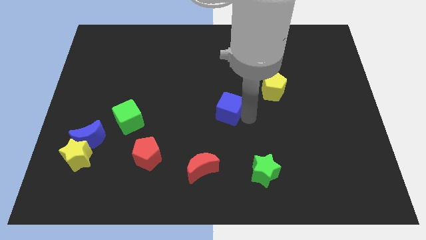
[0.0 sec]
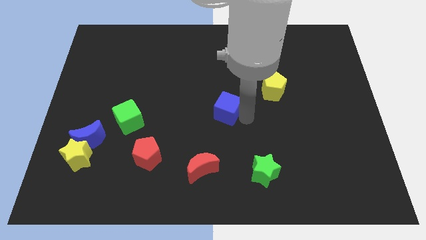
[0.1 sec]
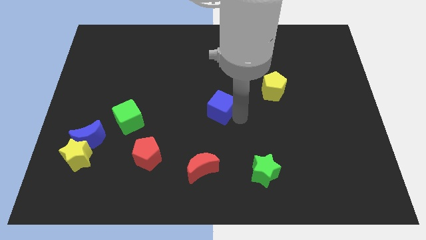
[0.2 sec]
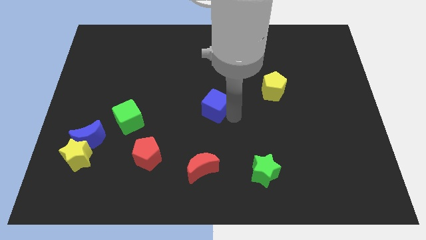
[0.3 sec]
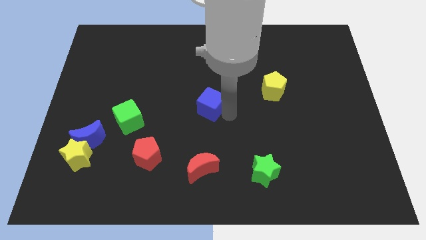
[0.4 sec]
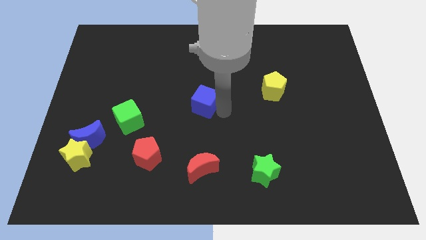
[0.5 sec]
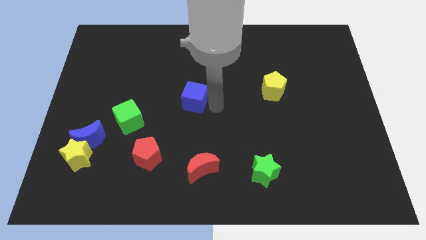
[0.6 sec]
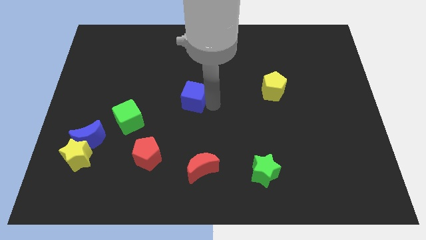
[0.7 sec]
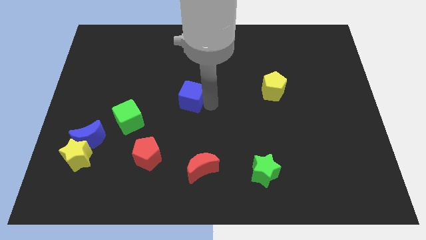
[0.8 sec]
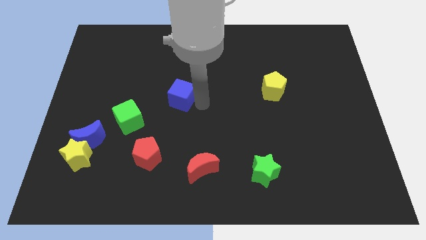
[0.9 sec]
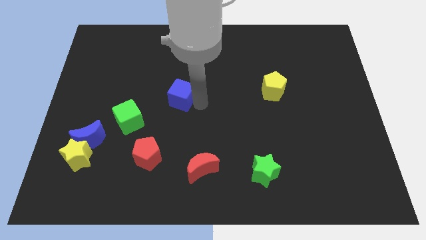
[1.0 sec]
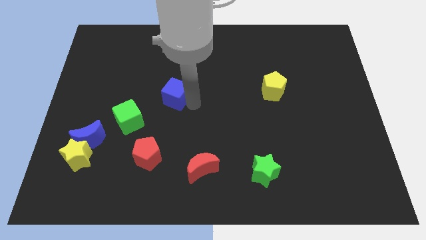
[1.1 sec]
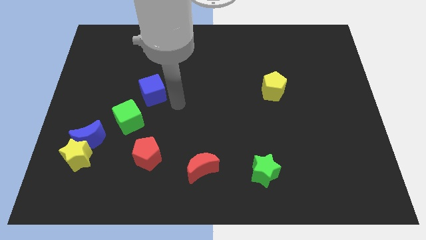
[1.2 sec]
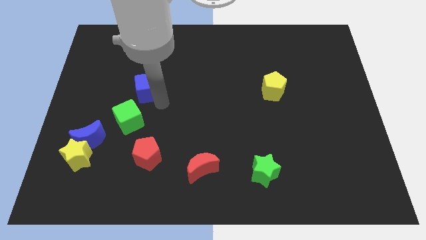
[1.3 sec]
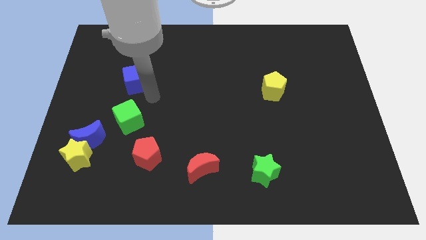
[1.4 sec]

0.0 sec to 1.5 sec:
place blue cube above green cube

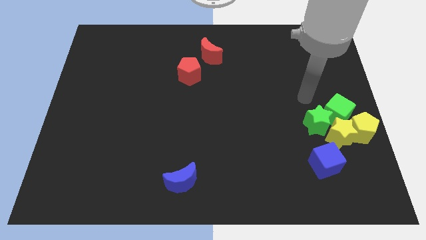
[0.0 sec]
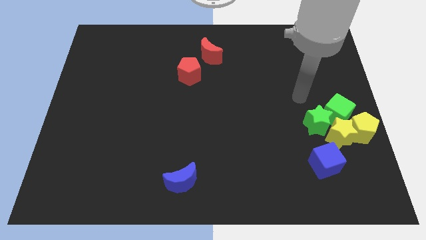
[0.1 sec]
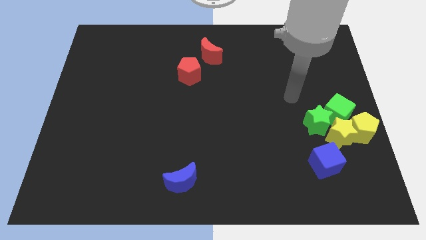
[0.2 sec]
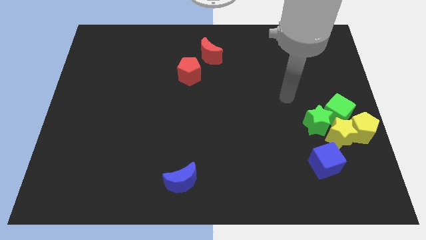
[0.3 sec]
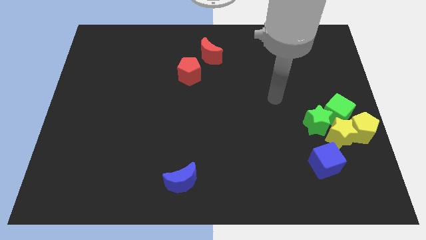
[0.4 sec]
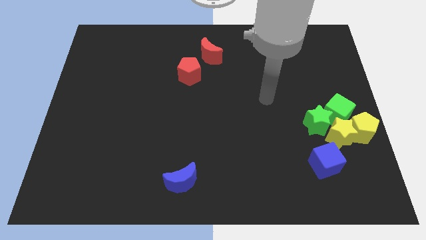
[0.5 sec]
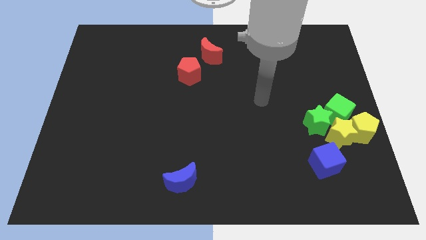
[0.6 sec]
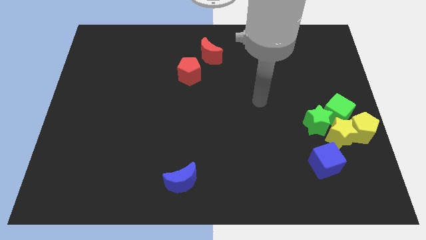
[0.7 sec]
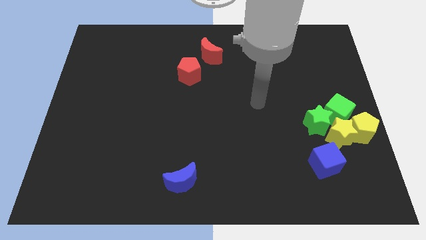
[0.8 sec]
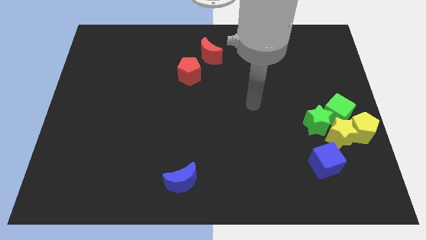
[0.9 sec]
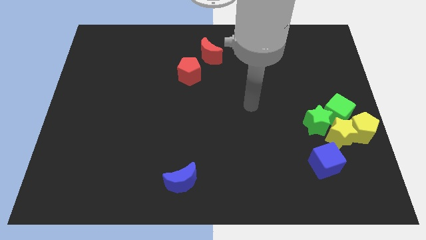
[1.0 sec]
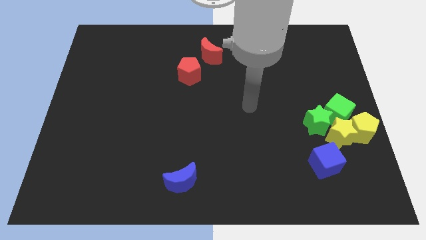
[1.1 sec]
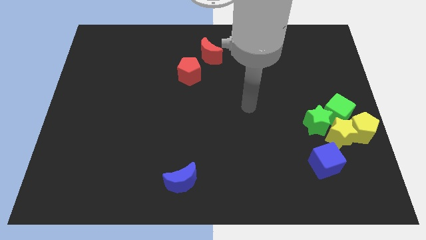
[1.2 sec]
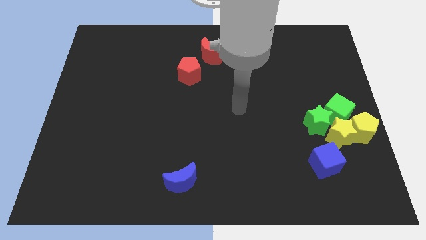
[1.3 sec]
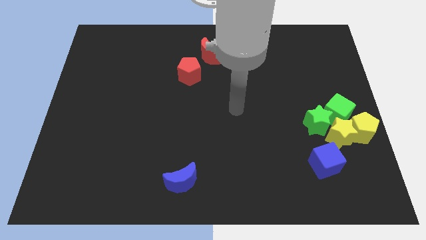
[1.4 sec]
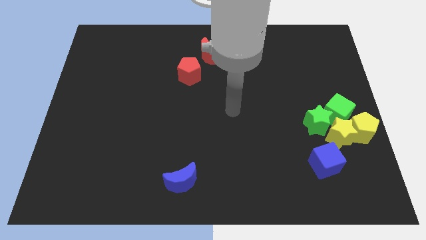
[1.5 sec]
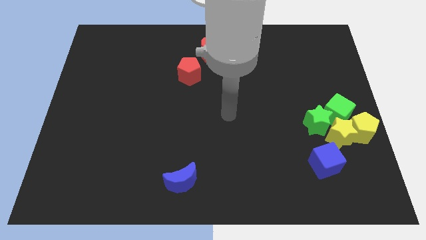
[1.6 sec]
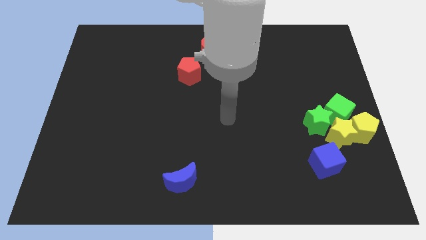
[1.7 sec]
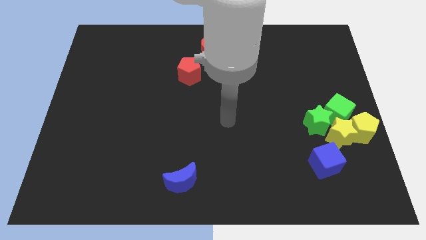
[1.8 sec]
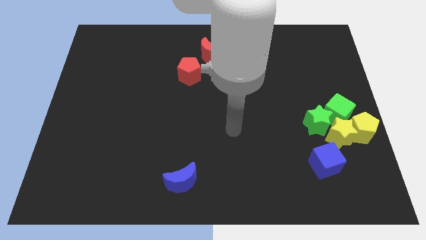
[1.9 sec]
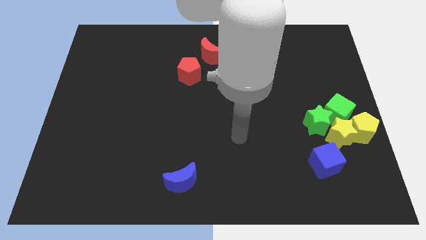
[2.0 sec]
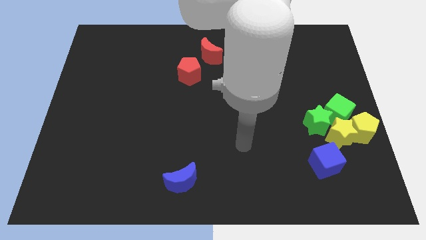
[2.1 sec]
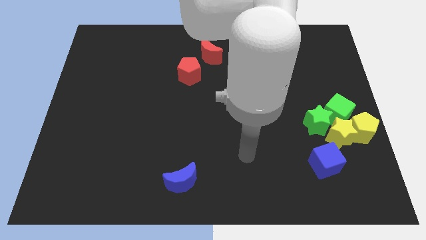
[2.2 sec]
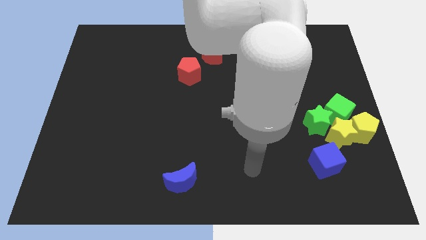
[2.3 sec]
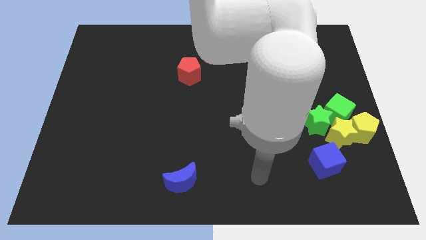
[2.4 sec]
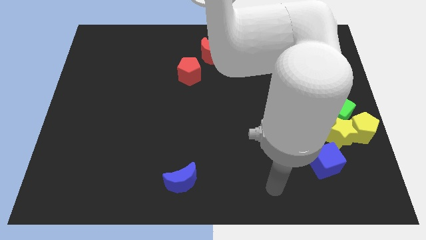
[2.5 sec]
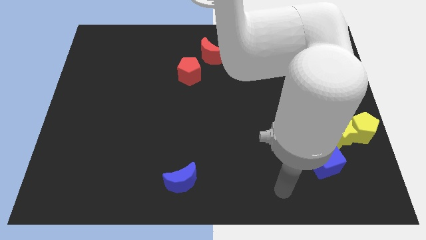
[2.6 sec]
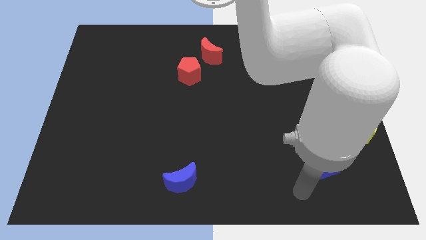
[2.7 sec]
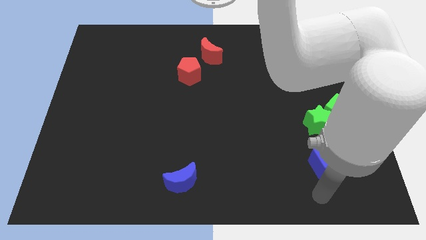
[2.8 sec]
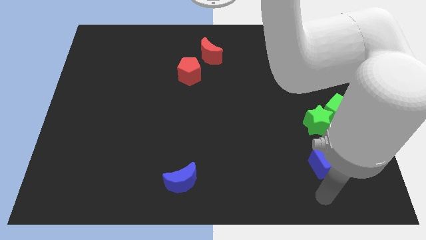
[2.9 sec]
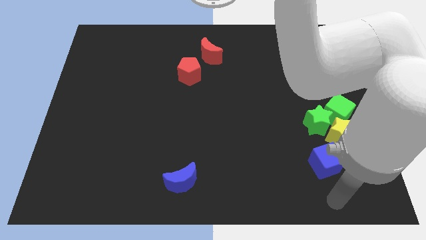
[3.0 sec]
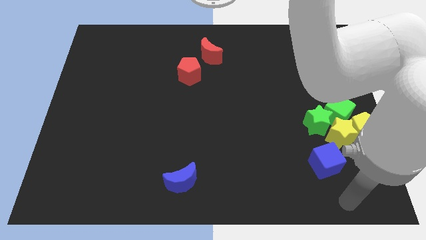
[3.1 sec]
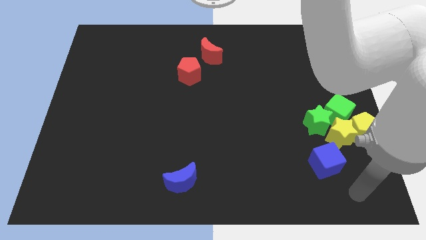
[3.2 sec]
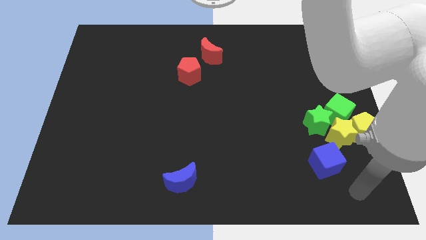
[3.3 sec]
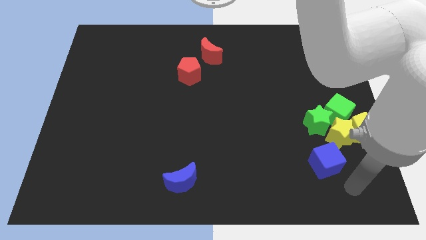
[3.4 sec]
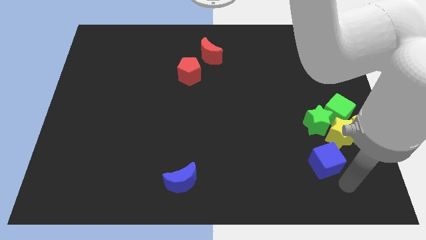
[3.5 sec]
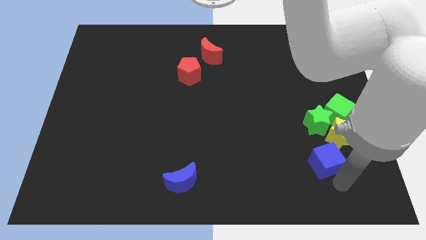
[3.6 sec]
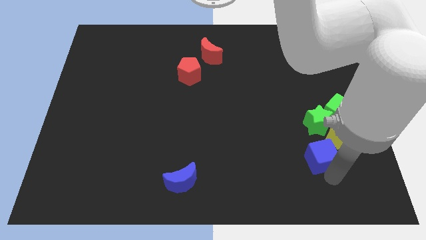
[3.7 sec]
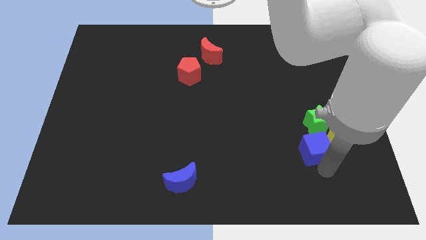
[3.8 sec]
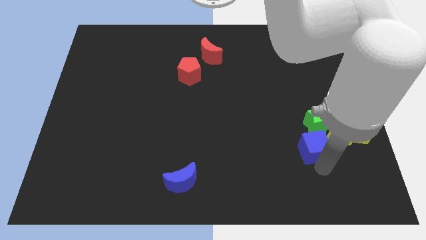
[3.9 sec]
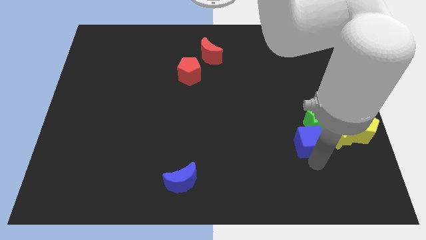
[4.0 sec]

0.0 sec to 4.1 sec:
move the blue cube into the green star

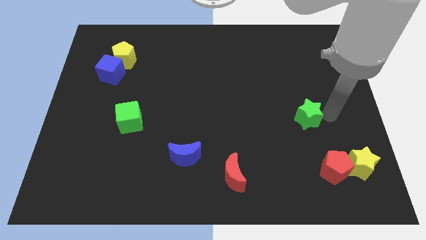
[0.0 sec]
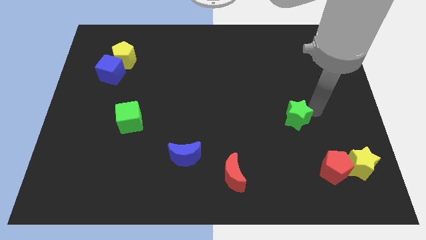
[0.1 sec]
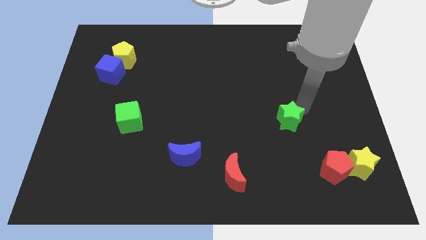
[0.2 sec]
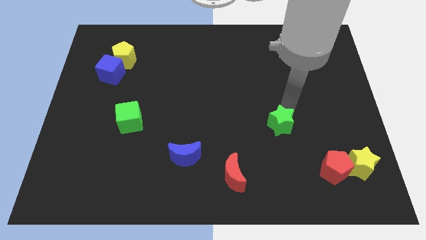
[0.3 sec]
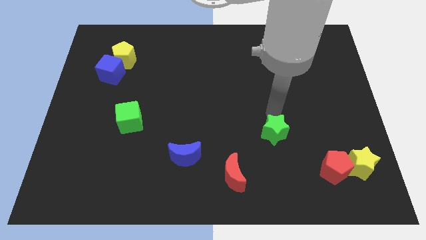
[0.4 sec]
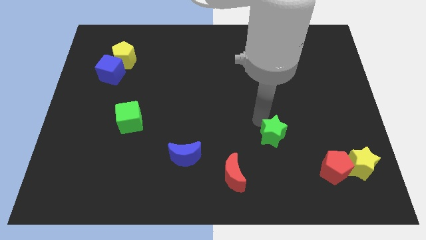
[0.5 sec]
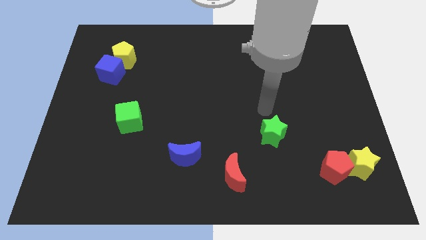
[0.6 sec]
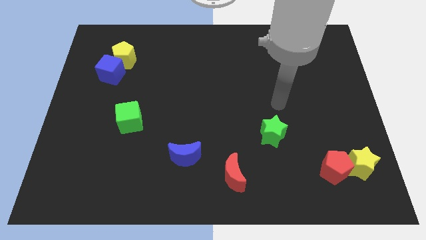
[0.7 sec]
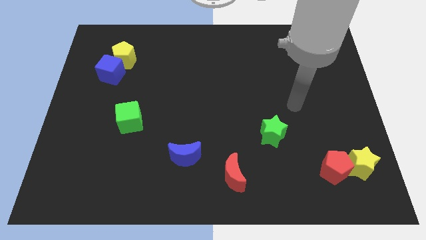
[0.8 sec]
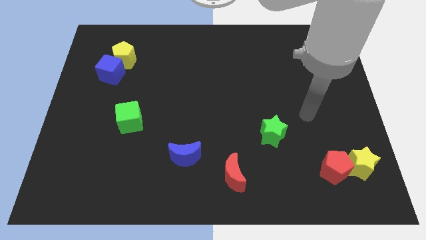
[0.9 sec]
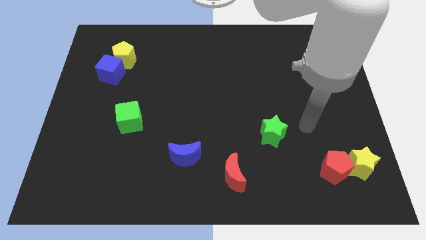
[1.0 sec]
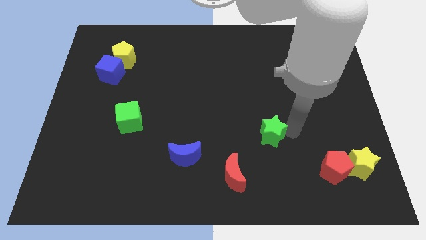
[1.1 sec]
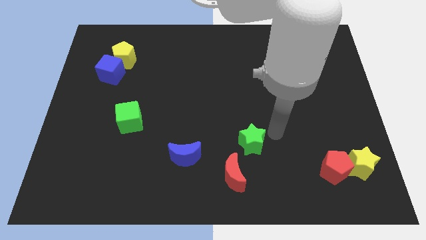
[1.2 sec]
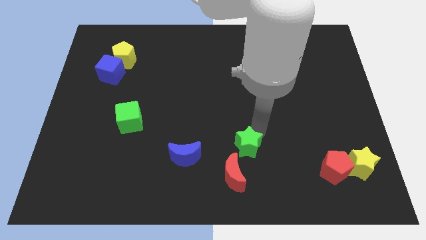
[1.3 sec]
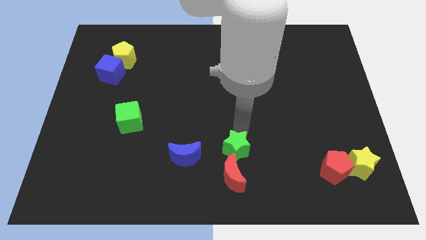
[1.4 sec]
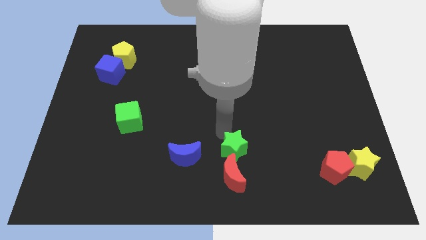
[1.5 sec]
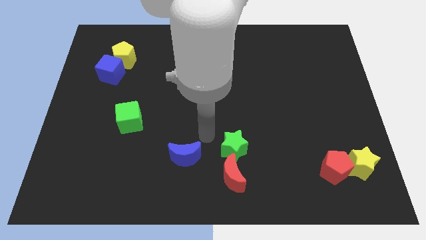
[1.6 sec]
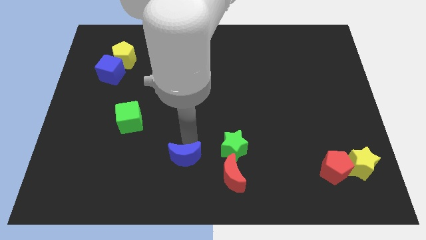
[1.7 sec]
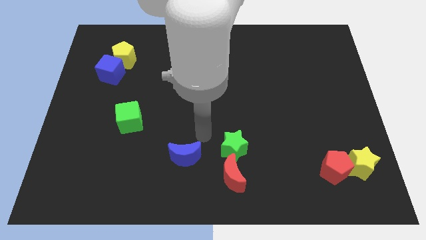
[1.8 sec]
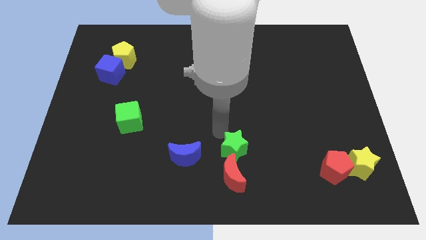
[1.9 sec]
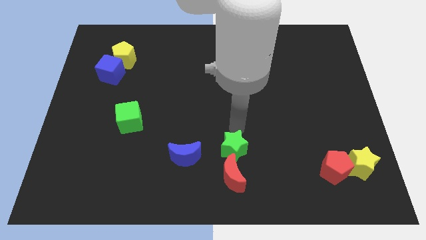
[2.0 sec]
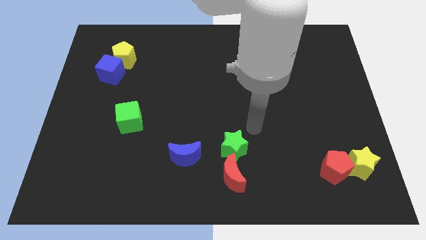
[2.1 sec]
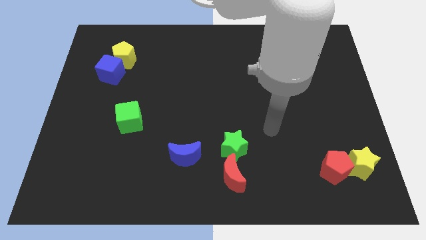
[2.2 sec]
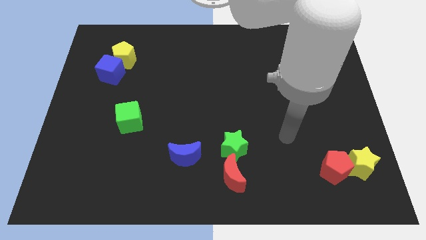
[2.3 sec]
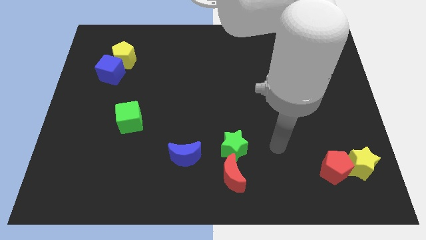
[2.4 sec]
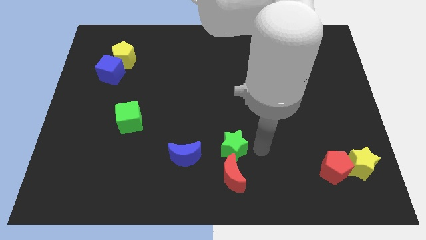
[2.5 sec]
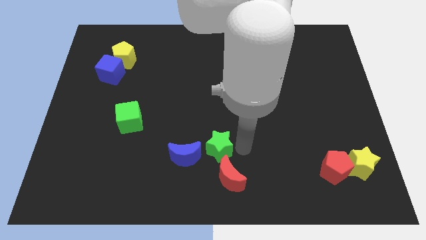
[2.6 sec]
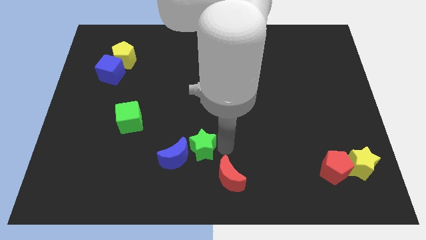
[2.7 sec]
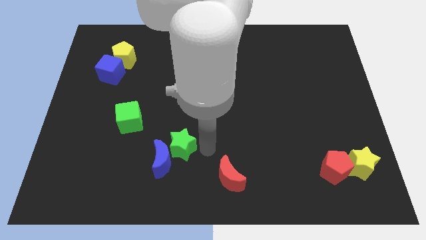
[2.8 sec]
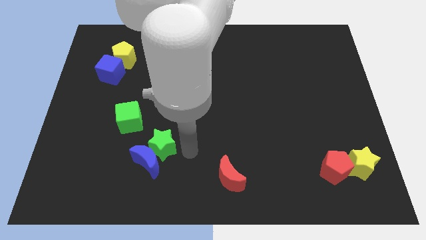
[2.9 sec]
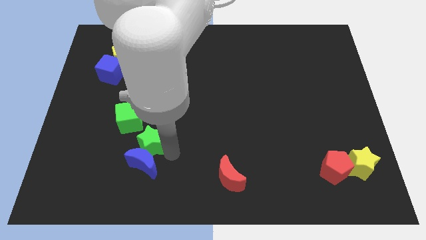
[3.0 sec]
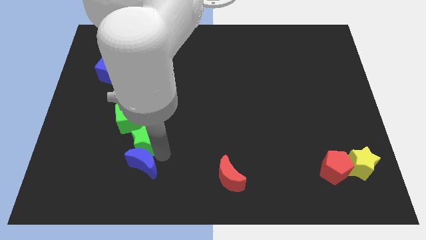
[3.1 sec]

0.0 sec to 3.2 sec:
push the green star into the blue moon
